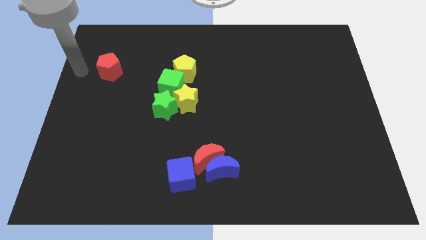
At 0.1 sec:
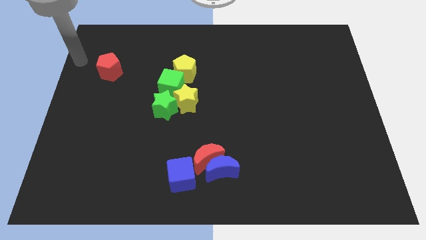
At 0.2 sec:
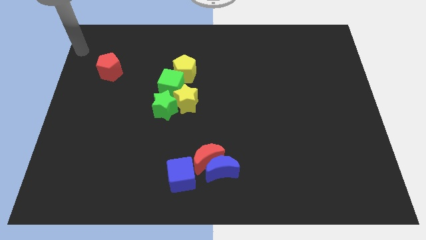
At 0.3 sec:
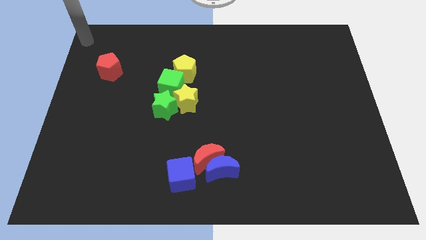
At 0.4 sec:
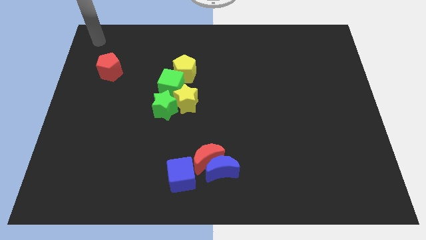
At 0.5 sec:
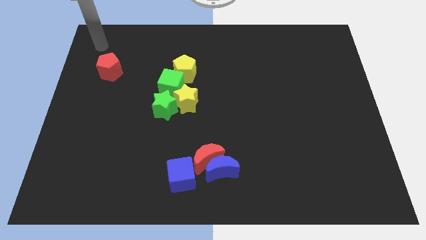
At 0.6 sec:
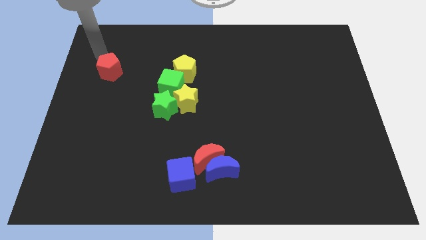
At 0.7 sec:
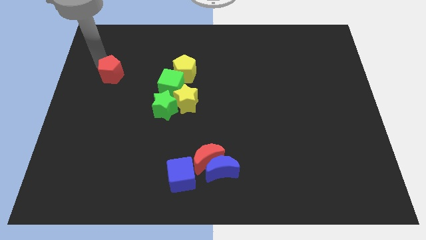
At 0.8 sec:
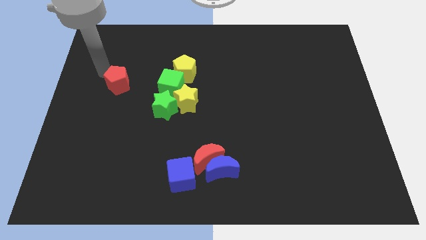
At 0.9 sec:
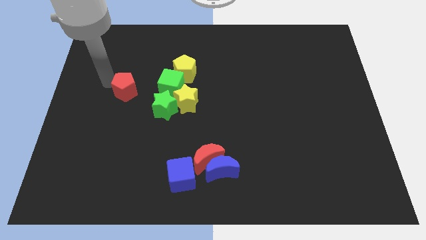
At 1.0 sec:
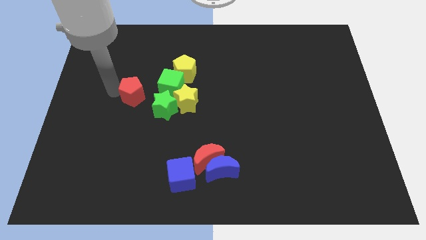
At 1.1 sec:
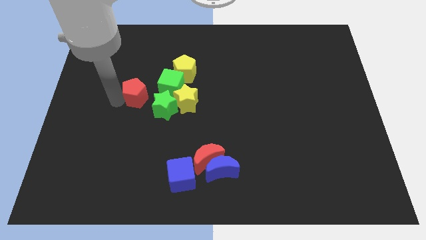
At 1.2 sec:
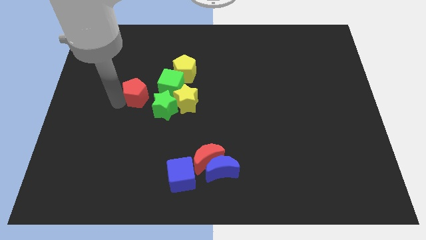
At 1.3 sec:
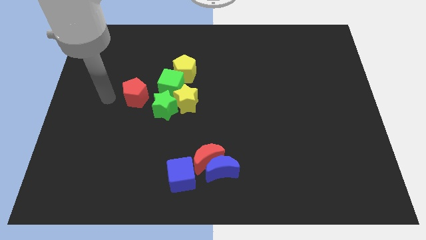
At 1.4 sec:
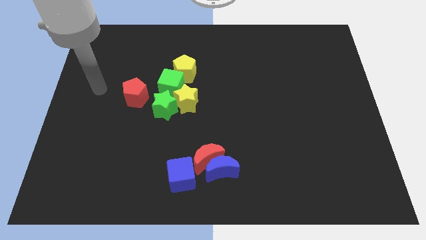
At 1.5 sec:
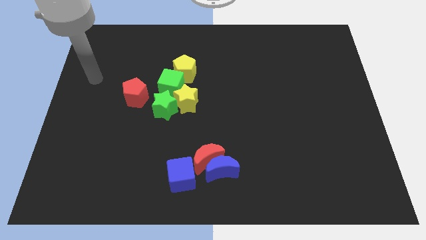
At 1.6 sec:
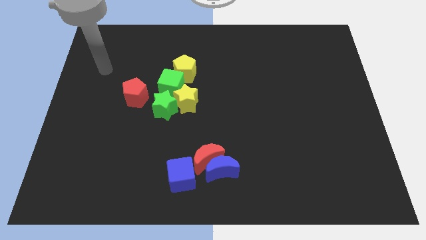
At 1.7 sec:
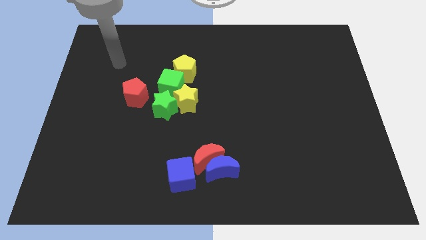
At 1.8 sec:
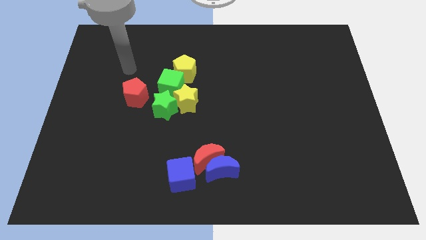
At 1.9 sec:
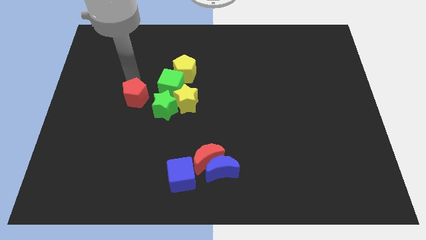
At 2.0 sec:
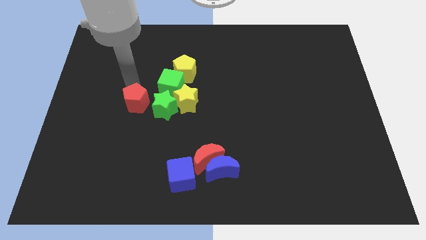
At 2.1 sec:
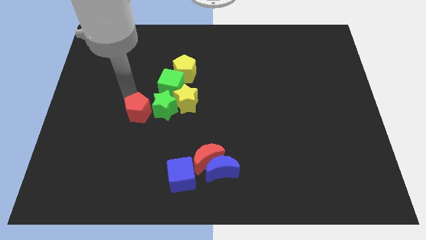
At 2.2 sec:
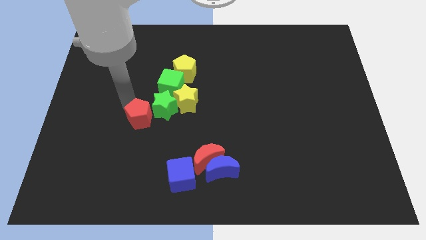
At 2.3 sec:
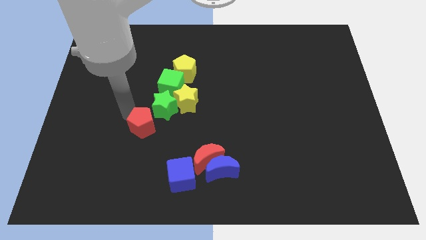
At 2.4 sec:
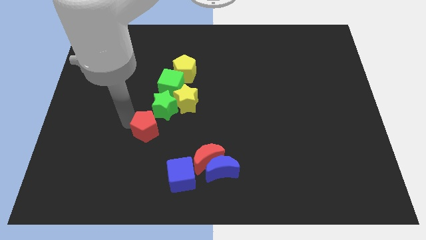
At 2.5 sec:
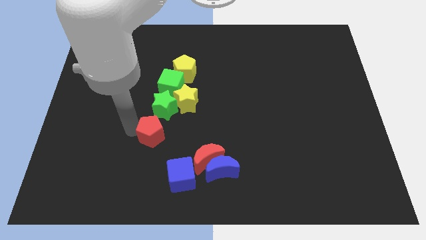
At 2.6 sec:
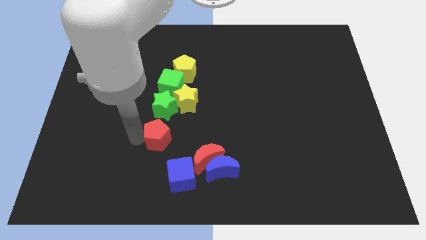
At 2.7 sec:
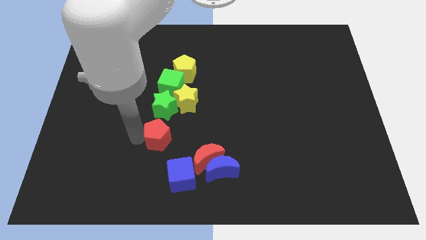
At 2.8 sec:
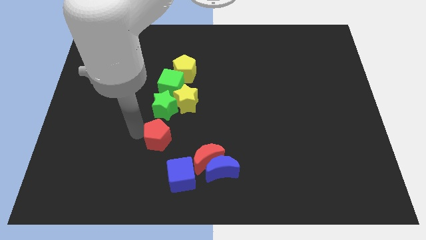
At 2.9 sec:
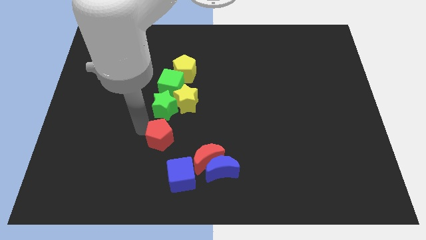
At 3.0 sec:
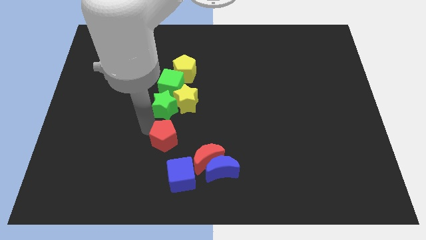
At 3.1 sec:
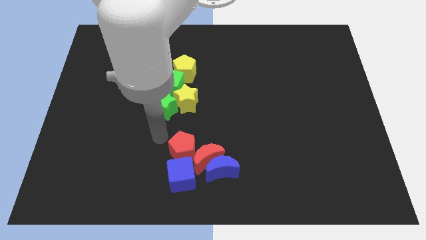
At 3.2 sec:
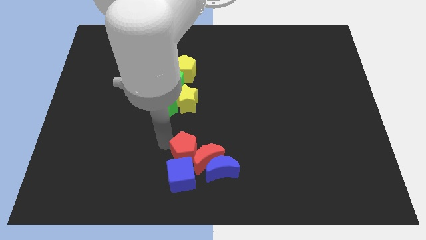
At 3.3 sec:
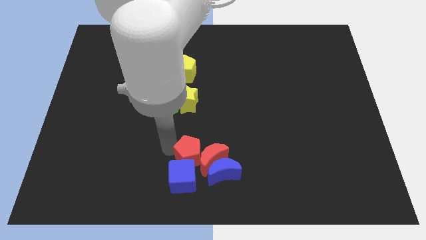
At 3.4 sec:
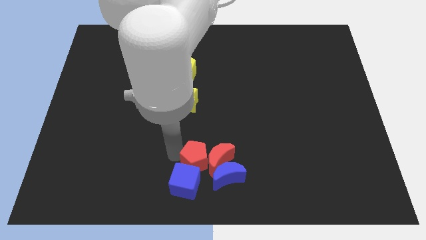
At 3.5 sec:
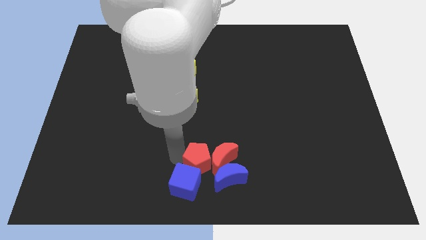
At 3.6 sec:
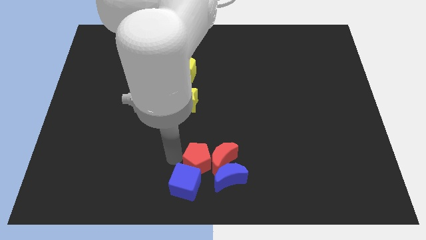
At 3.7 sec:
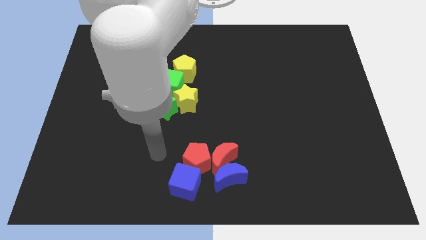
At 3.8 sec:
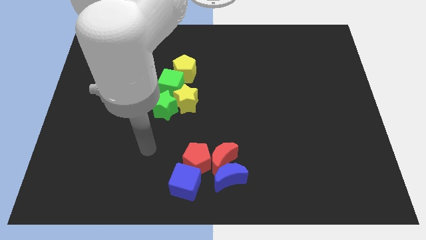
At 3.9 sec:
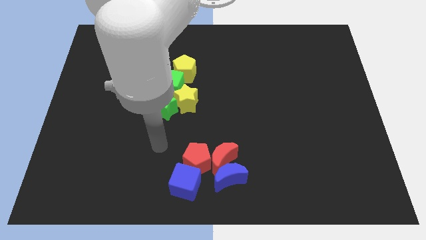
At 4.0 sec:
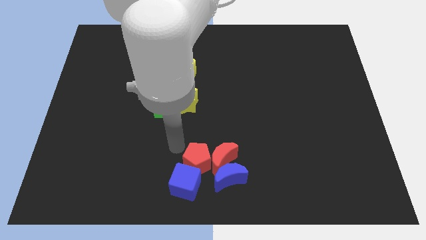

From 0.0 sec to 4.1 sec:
place red pentagon to the left of red moon

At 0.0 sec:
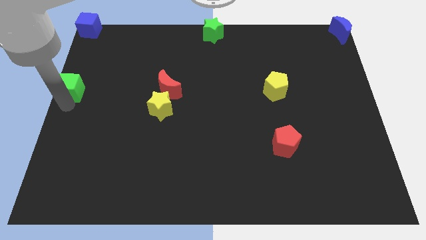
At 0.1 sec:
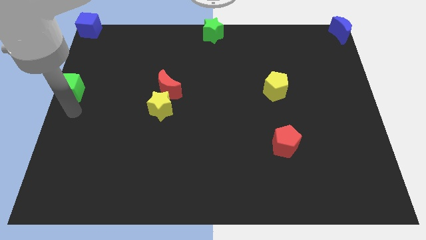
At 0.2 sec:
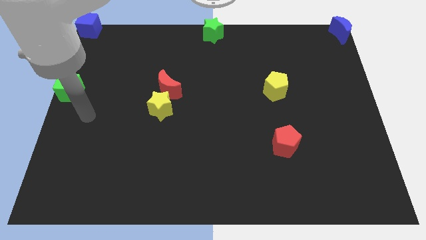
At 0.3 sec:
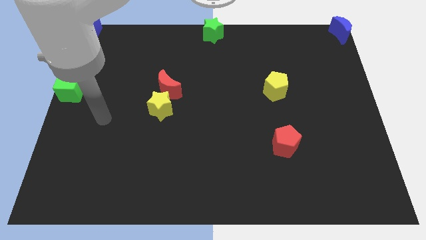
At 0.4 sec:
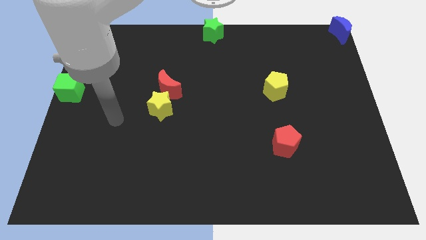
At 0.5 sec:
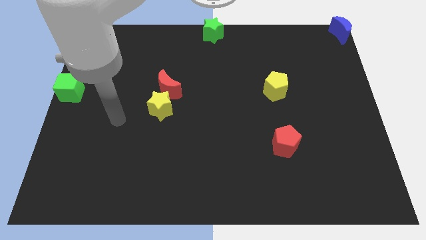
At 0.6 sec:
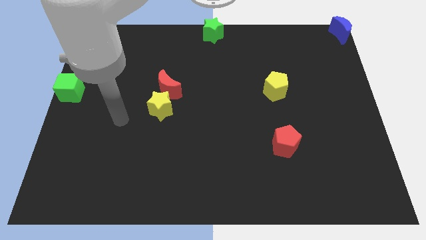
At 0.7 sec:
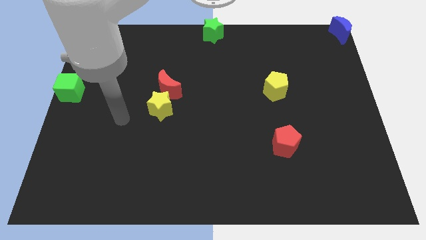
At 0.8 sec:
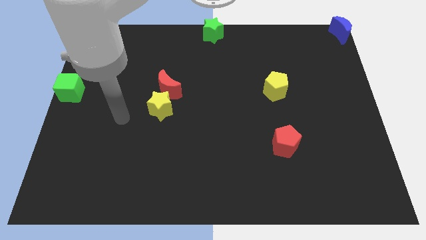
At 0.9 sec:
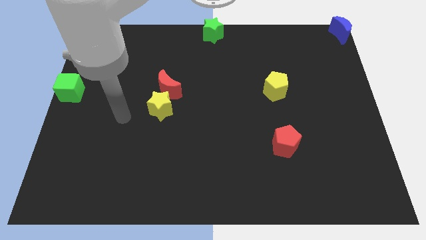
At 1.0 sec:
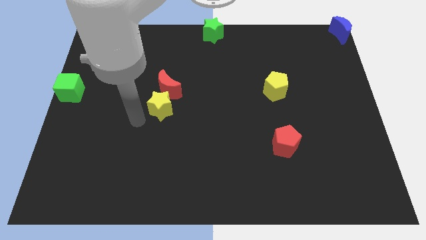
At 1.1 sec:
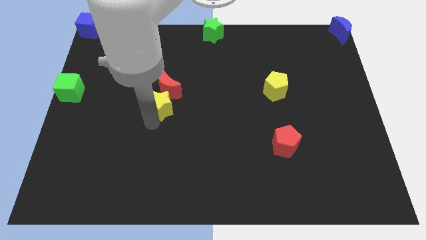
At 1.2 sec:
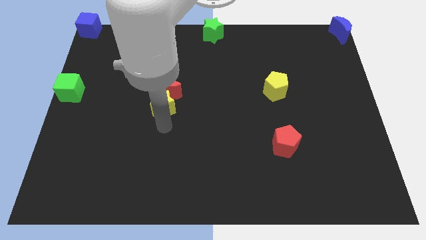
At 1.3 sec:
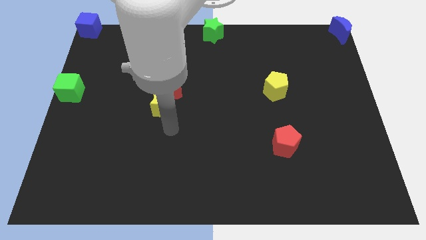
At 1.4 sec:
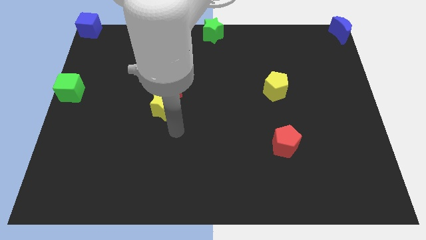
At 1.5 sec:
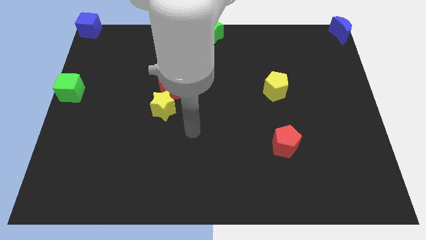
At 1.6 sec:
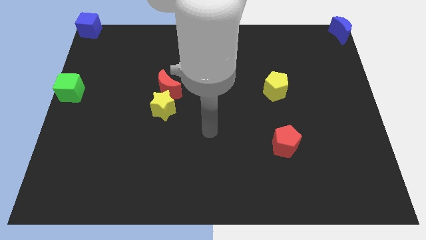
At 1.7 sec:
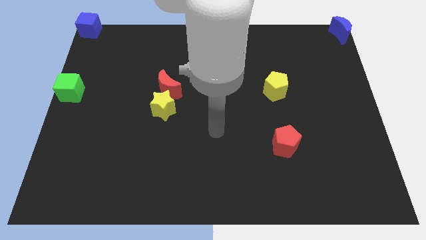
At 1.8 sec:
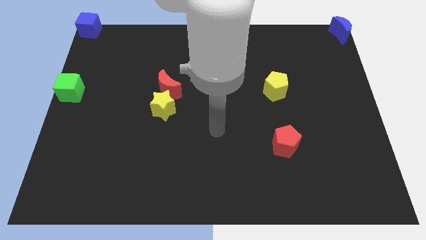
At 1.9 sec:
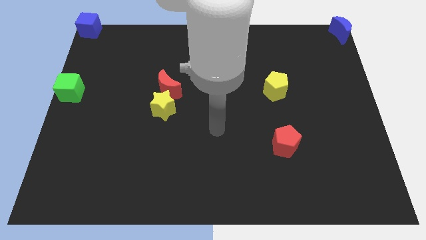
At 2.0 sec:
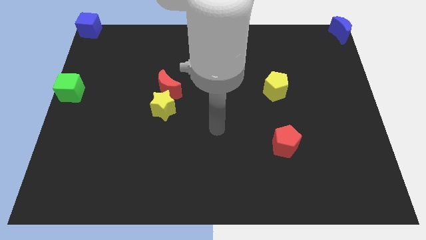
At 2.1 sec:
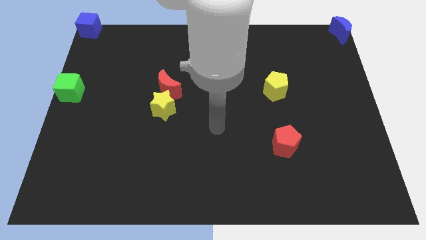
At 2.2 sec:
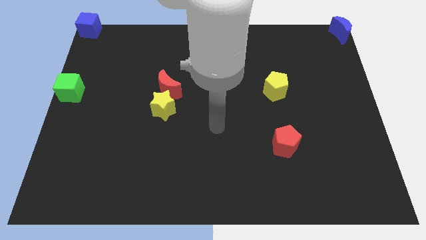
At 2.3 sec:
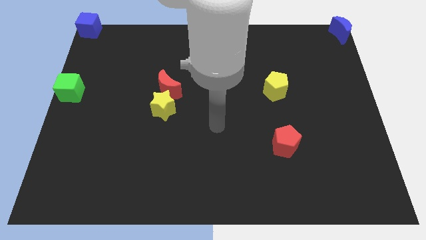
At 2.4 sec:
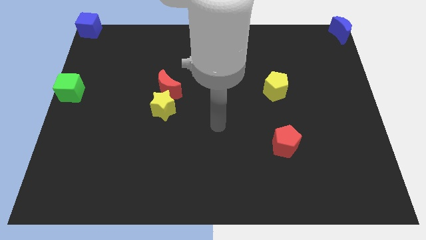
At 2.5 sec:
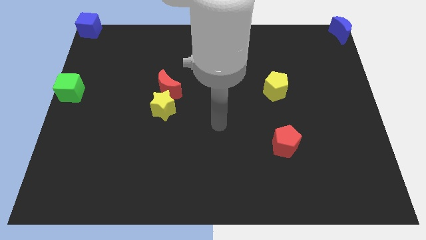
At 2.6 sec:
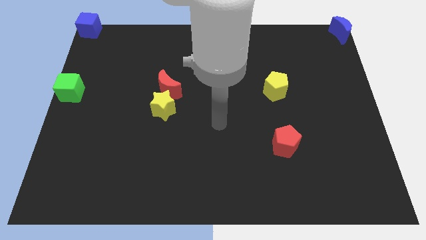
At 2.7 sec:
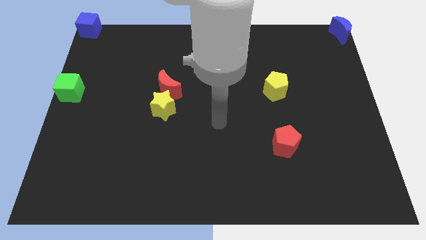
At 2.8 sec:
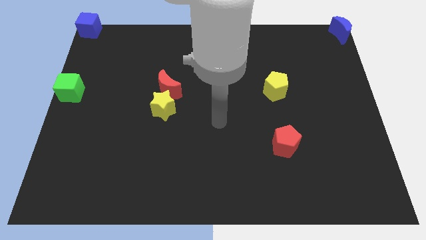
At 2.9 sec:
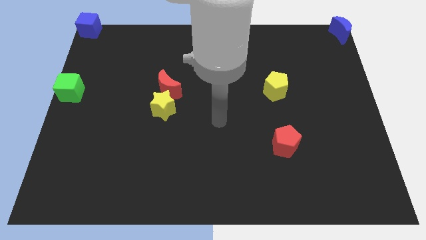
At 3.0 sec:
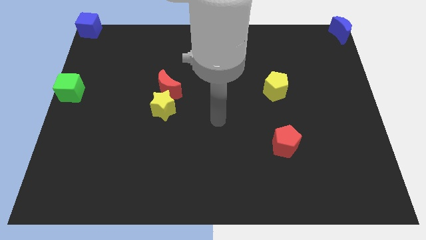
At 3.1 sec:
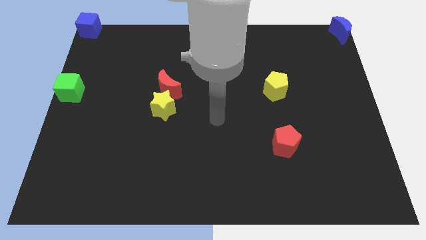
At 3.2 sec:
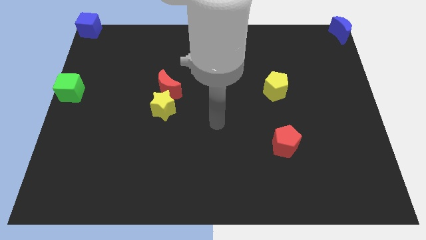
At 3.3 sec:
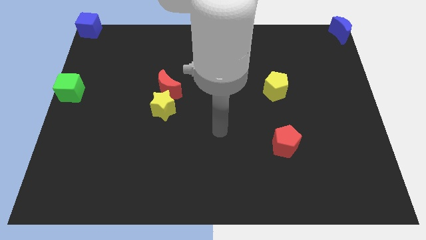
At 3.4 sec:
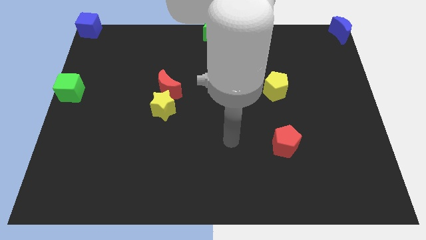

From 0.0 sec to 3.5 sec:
place your arm at the center of the board

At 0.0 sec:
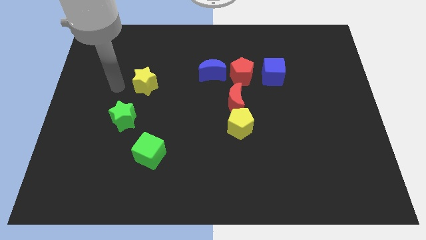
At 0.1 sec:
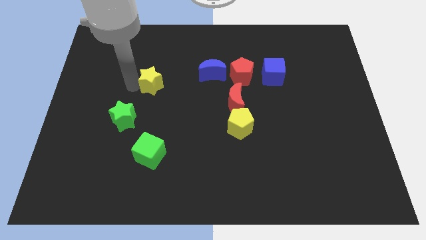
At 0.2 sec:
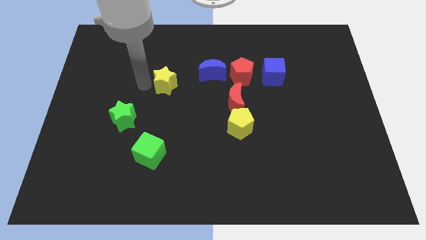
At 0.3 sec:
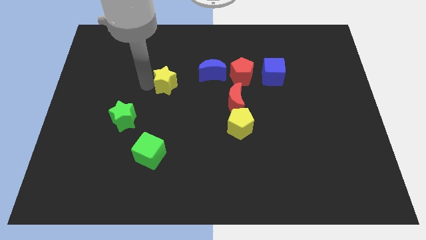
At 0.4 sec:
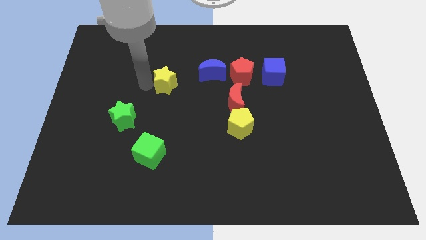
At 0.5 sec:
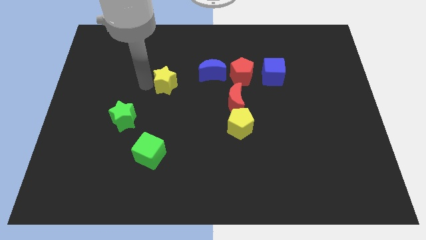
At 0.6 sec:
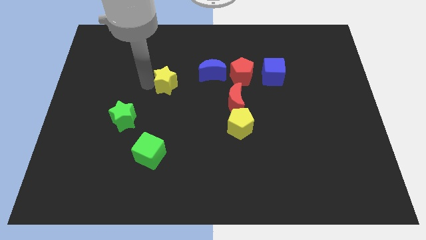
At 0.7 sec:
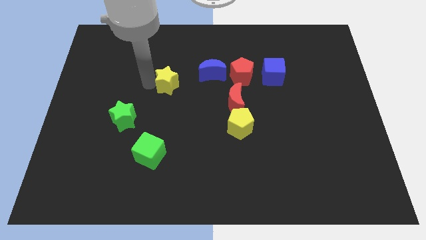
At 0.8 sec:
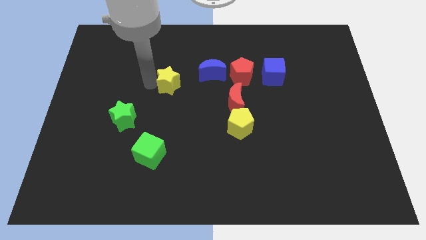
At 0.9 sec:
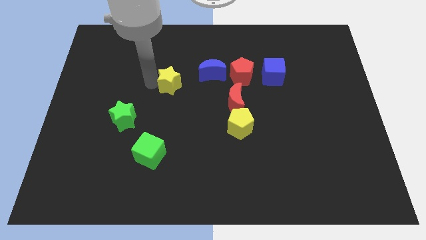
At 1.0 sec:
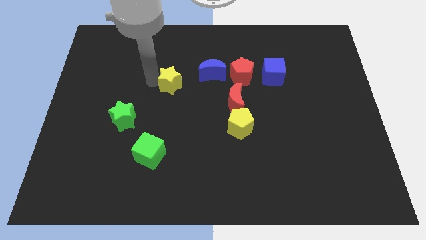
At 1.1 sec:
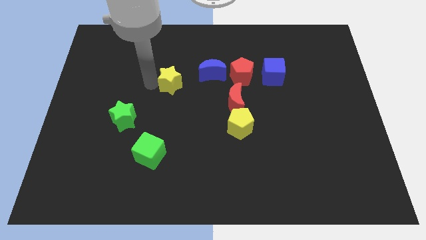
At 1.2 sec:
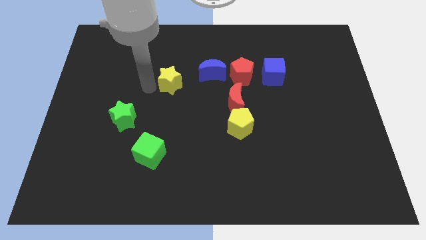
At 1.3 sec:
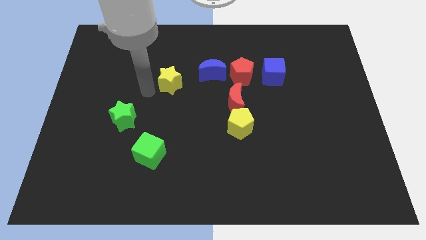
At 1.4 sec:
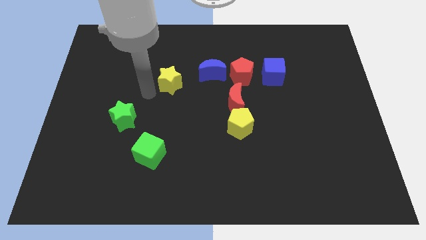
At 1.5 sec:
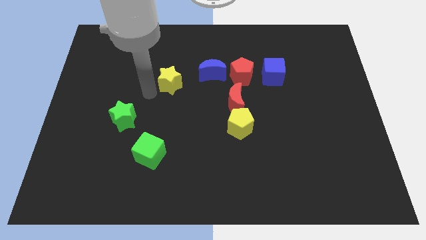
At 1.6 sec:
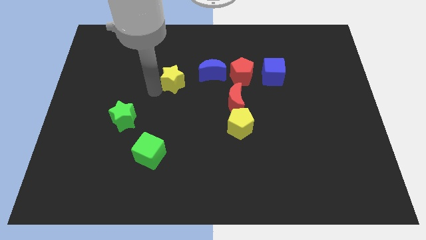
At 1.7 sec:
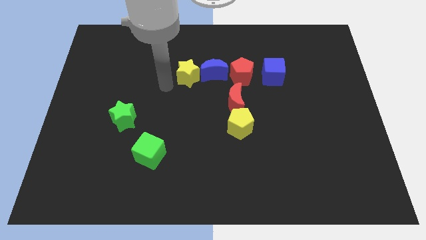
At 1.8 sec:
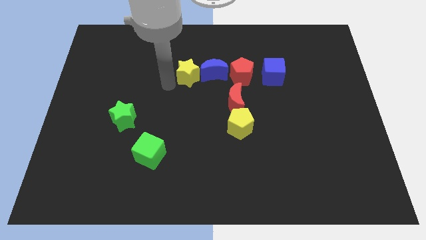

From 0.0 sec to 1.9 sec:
move the yellow star to the left side of the blue crescent
